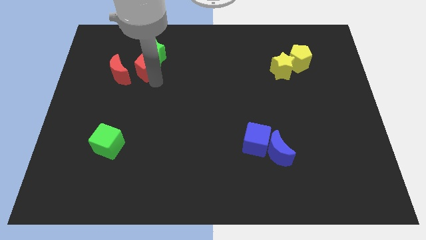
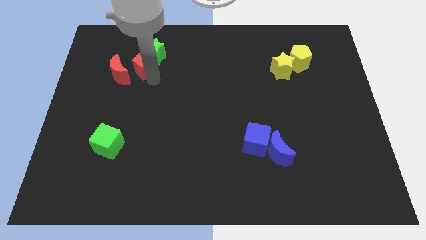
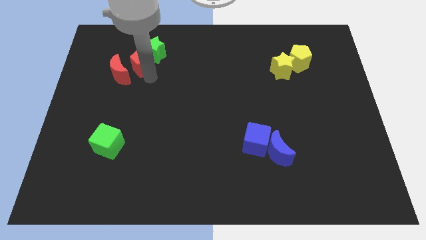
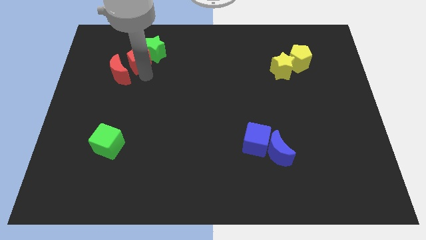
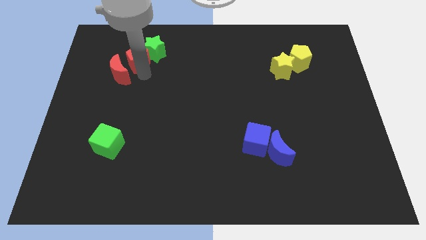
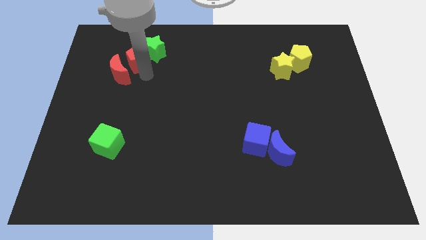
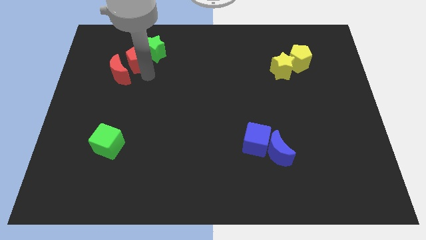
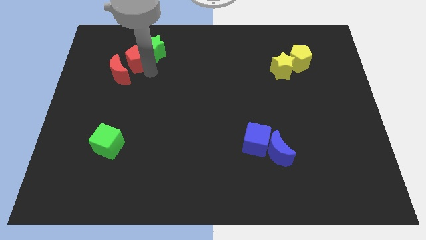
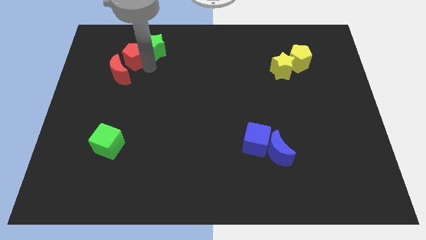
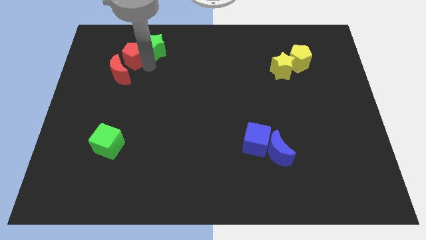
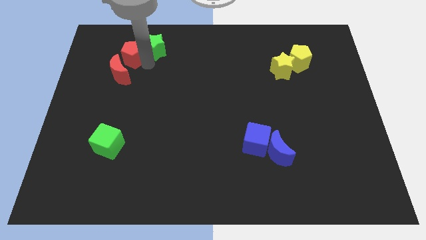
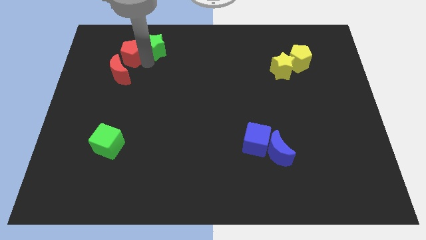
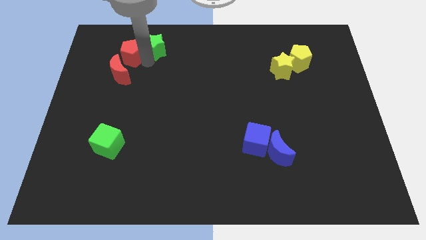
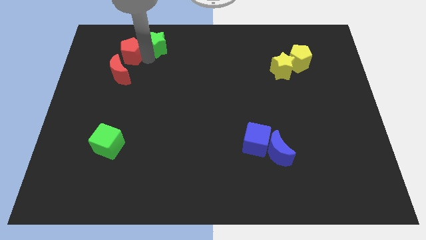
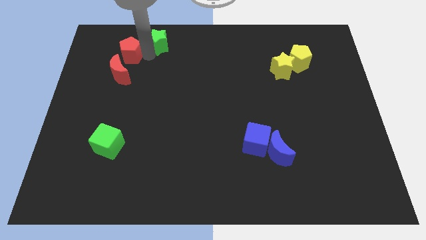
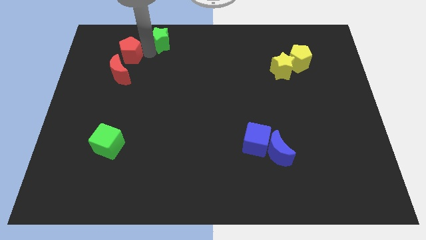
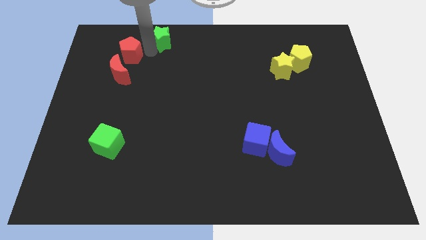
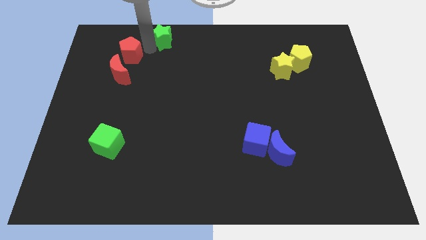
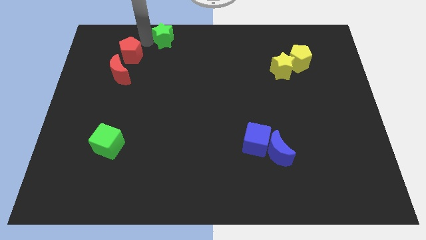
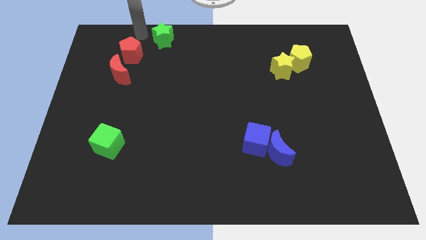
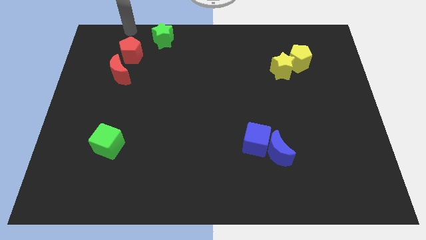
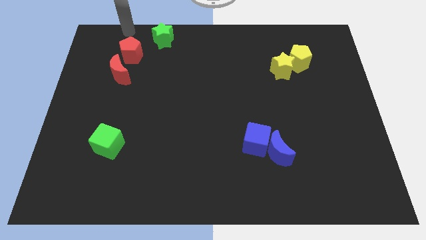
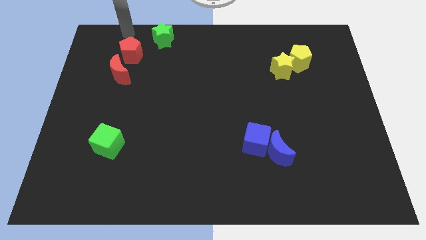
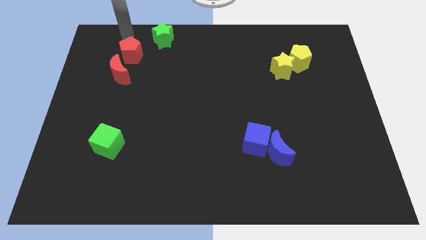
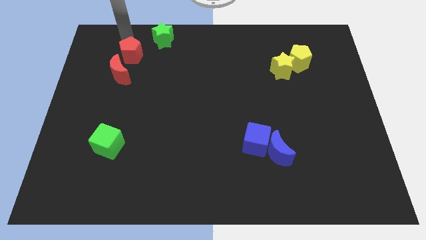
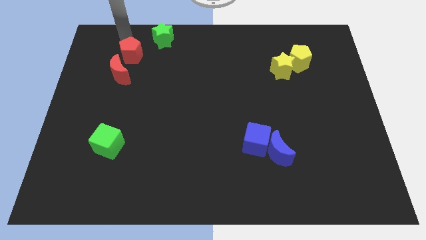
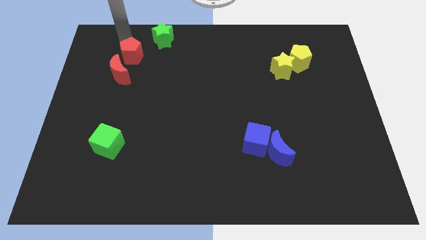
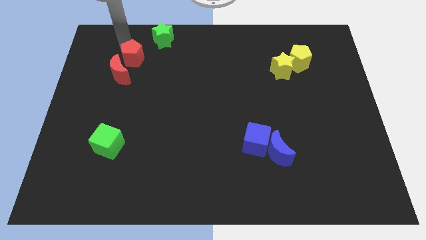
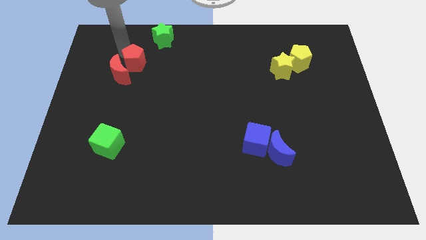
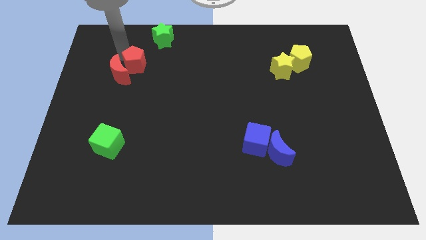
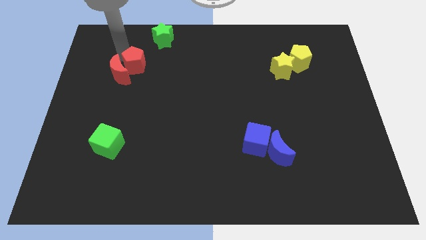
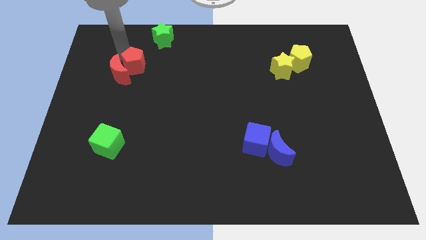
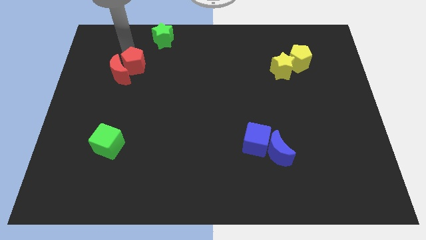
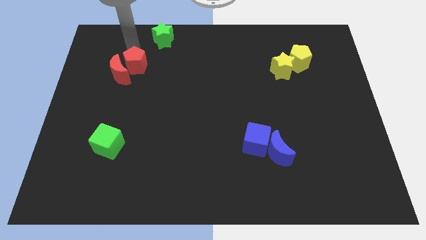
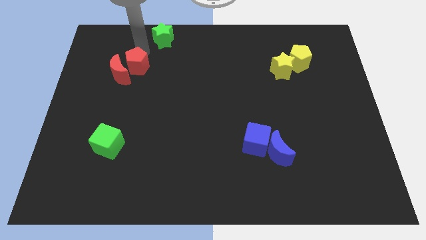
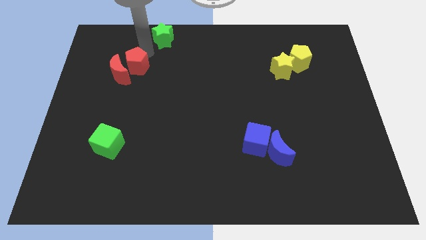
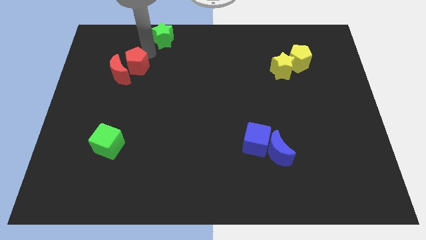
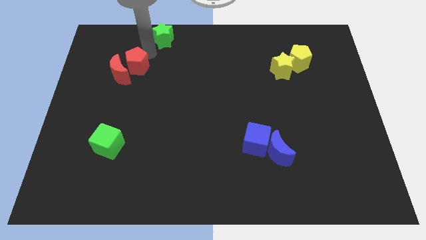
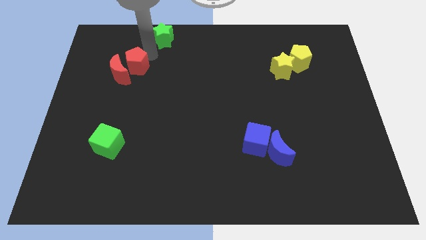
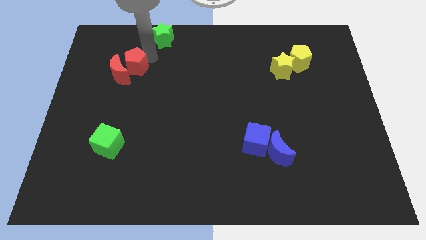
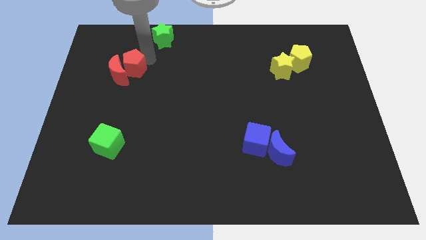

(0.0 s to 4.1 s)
move the red pentagon into the top right side of the red crescent

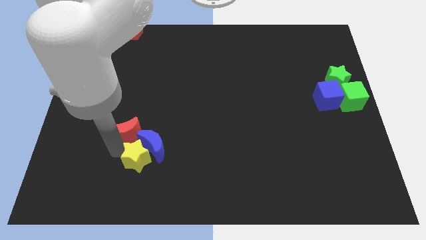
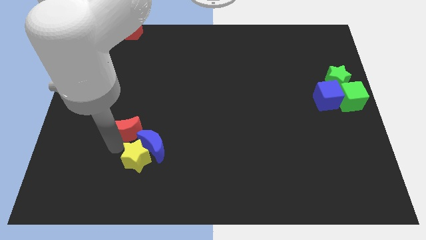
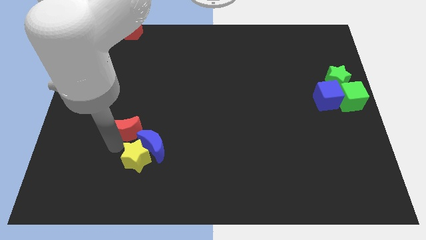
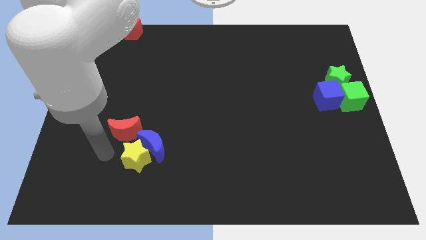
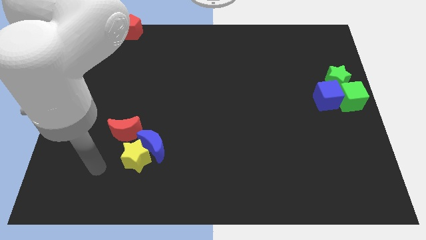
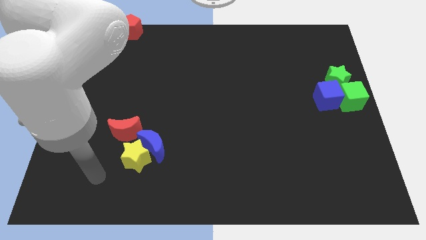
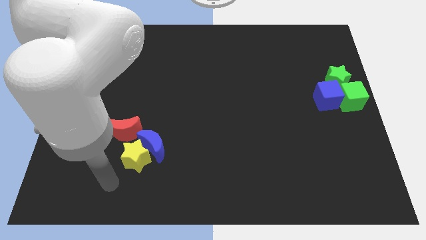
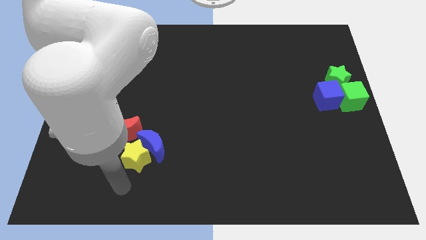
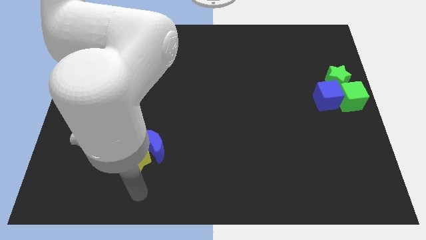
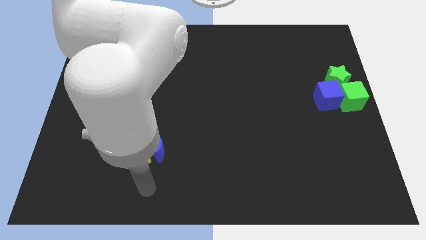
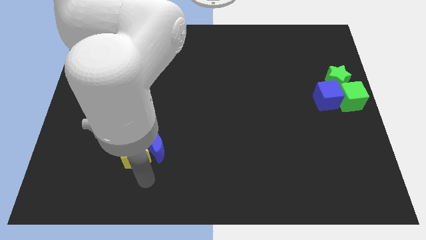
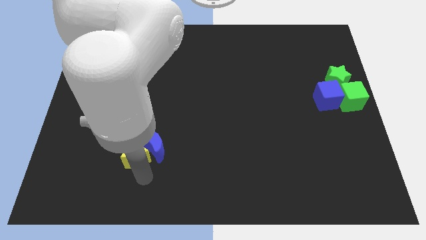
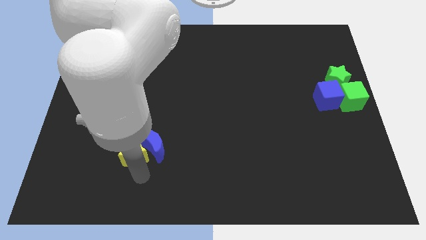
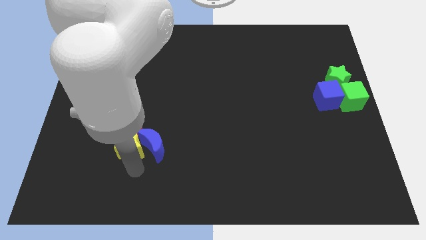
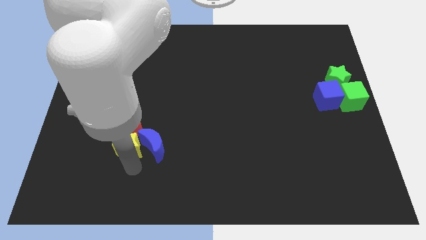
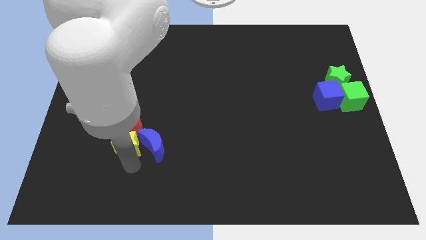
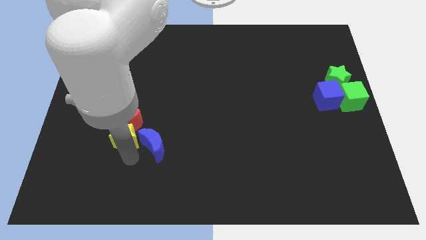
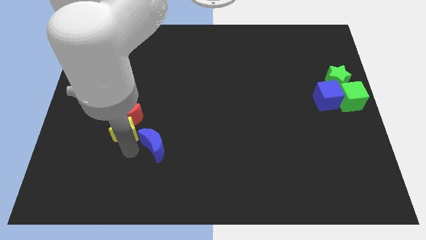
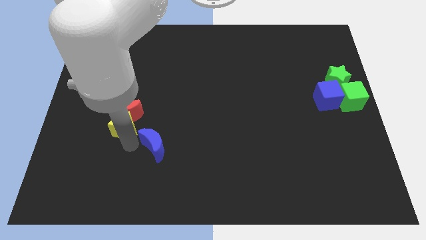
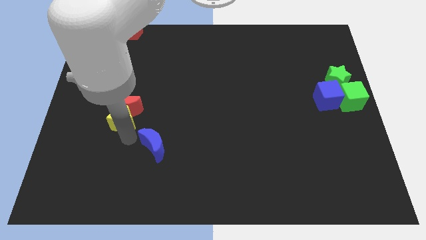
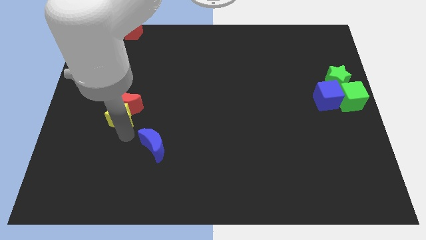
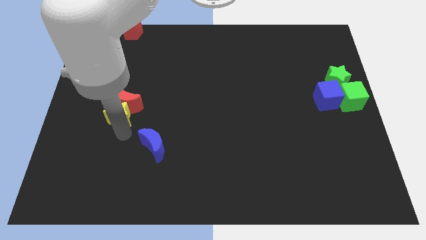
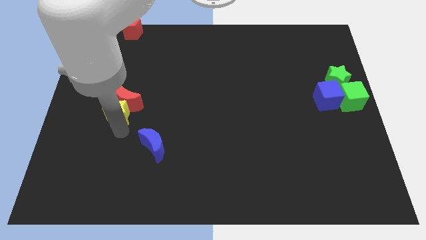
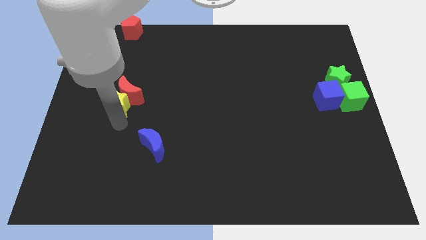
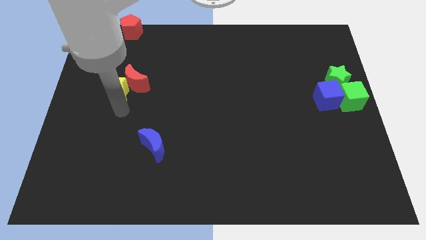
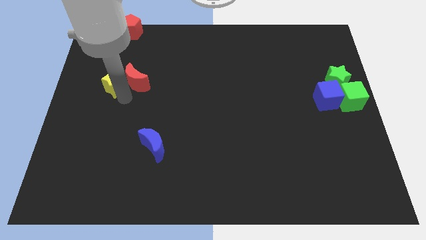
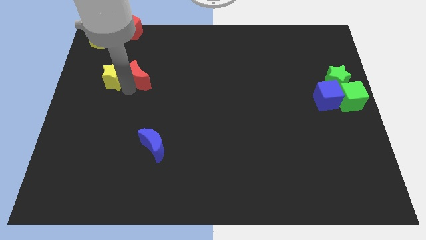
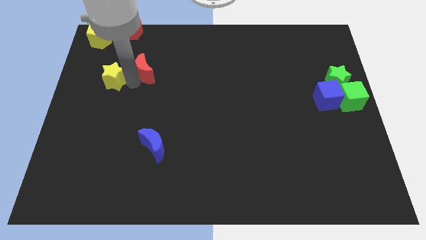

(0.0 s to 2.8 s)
move the yellow star along with the red crescent slightly to the top

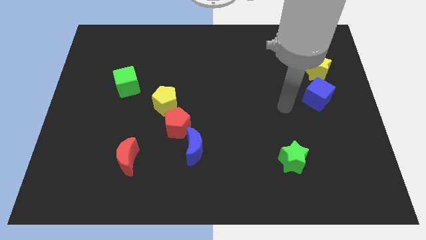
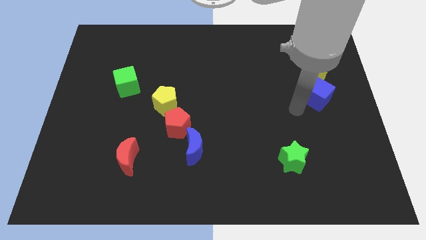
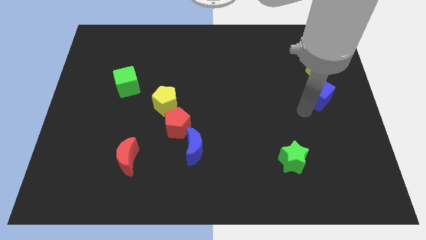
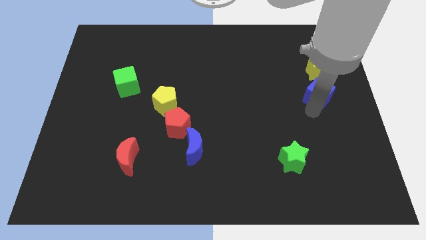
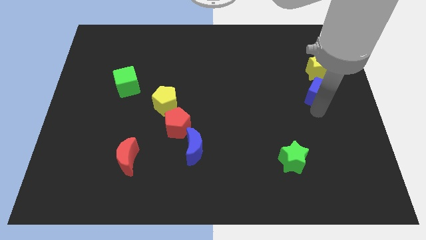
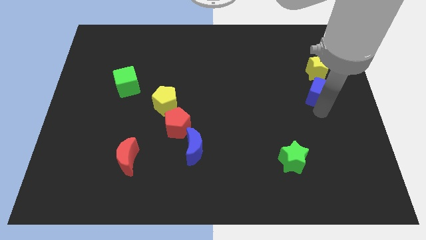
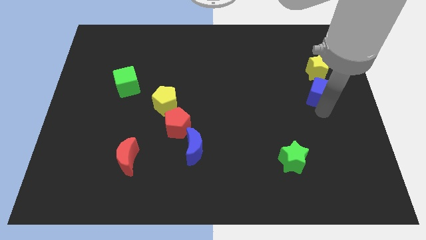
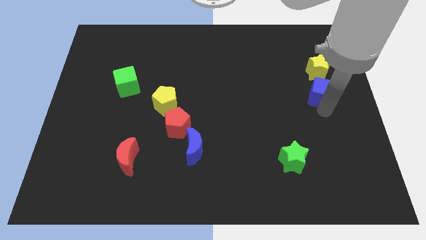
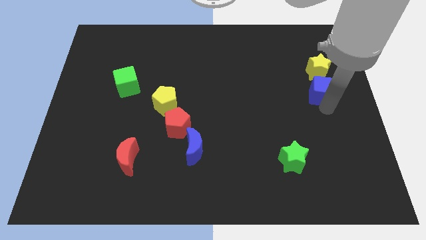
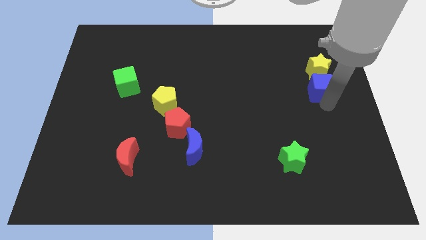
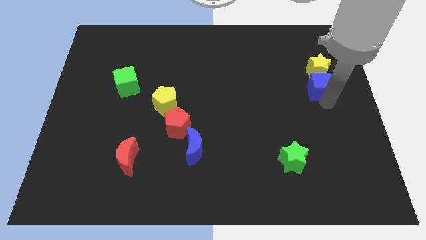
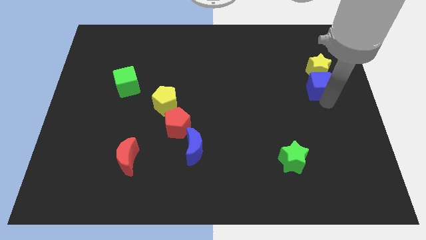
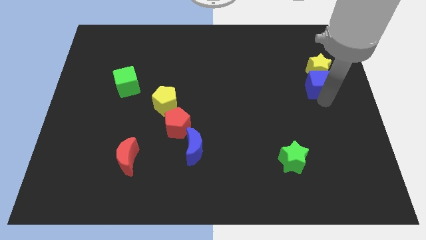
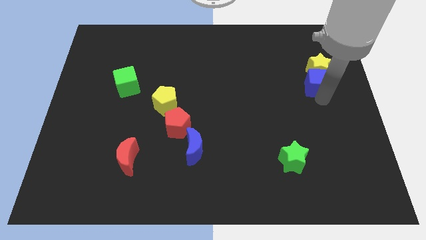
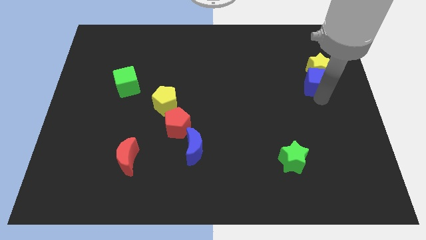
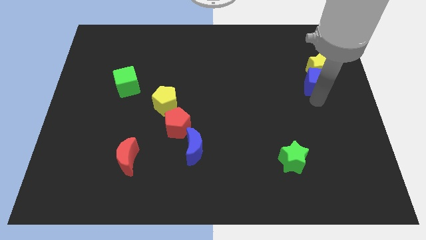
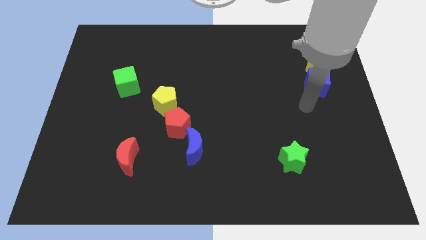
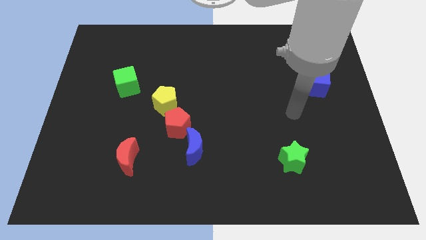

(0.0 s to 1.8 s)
push the blue cube close to the yellow star
